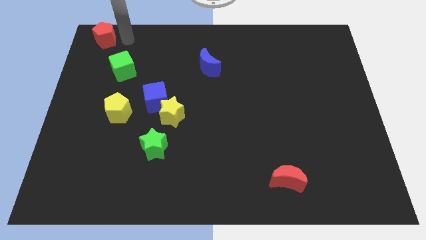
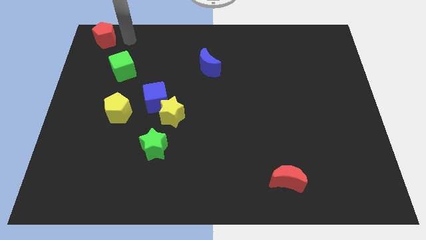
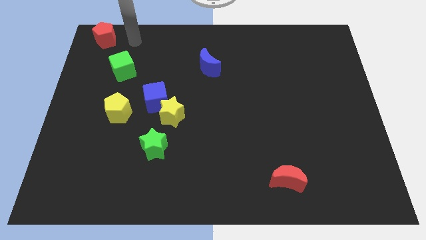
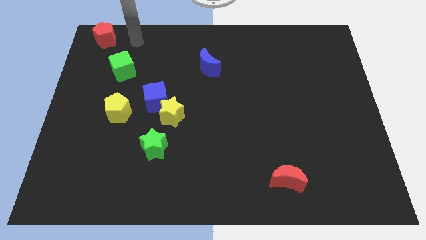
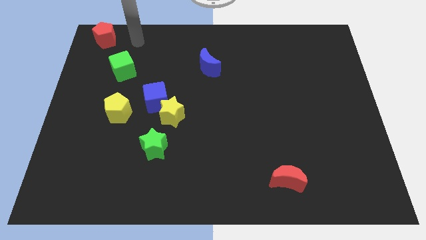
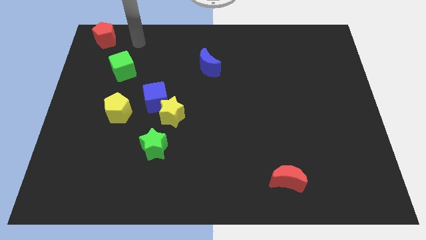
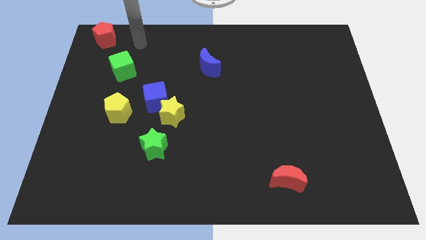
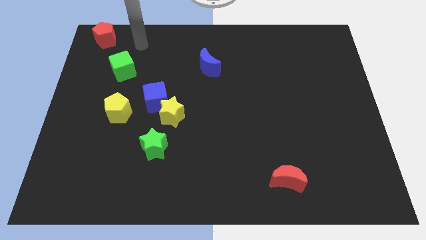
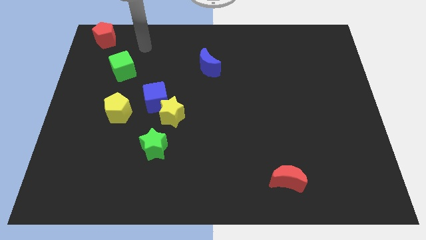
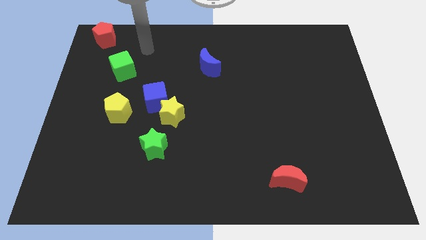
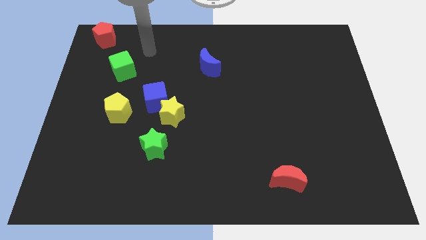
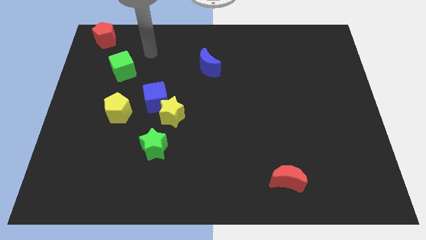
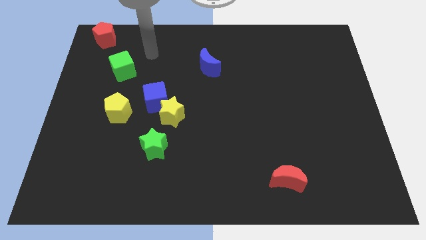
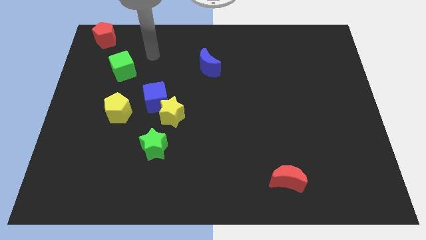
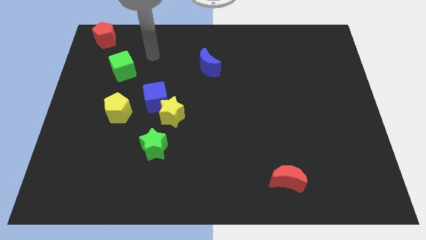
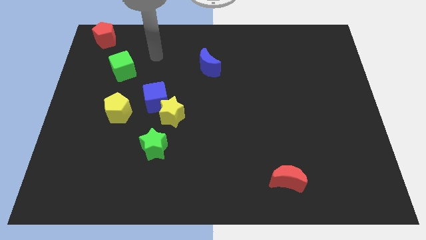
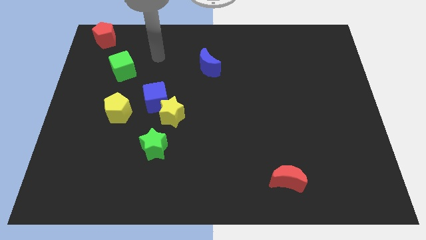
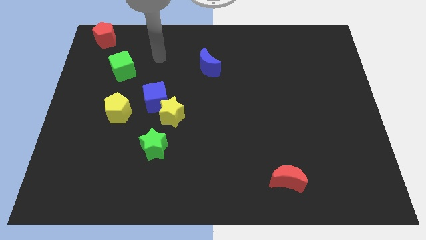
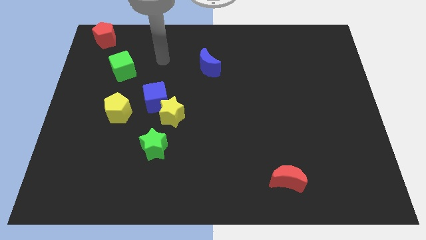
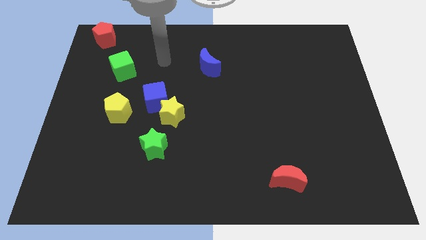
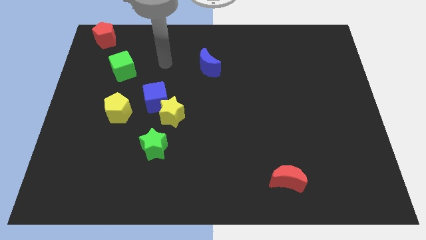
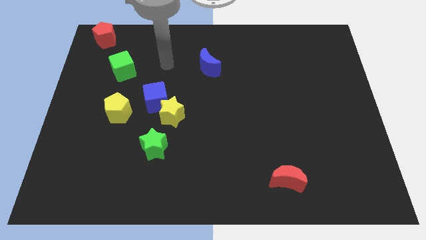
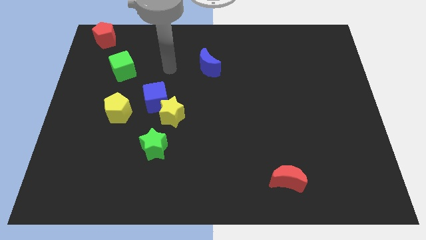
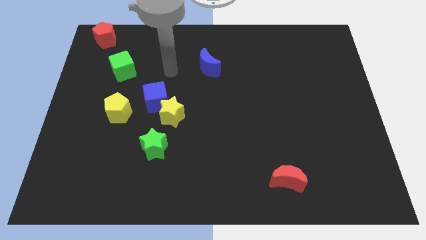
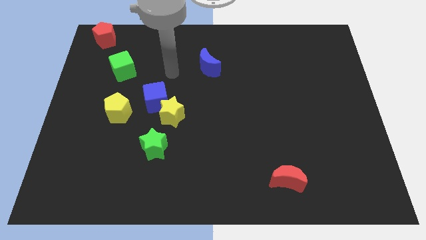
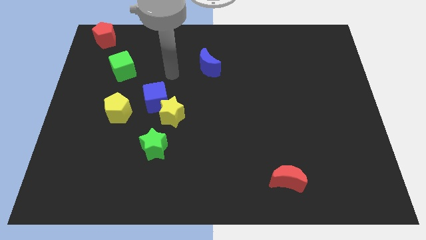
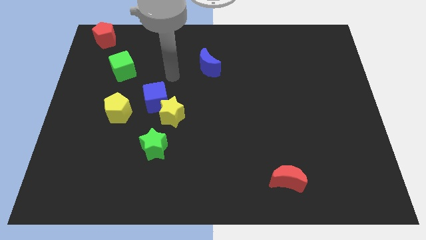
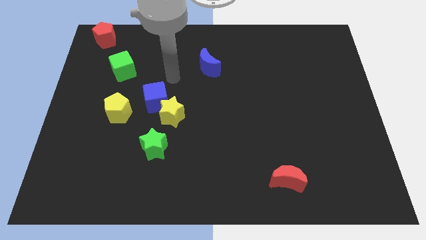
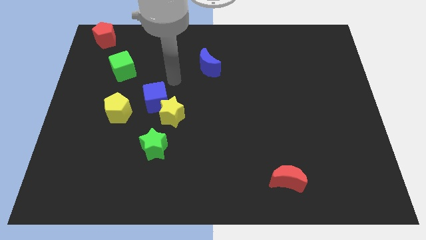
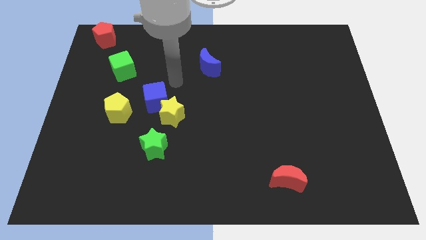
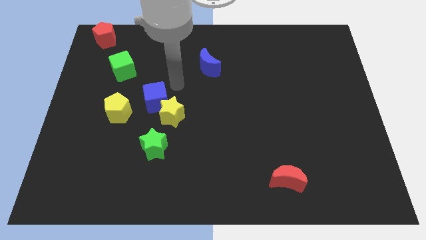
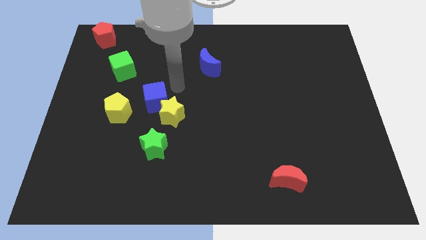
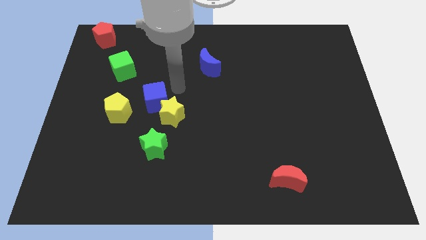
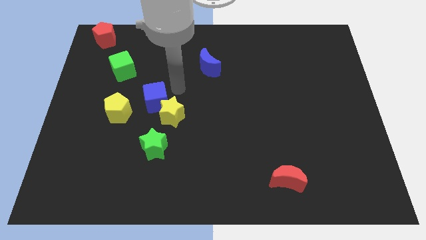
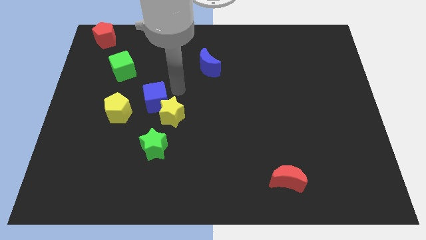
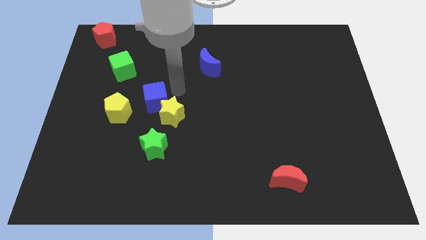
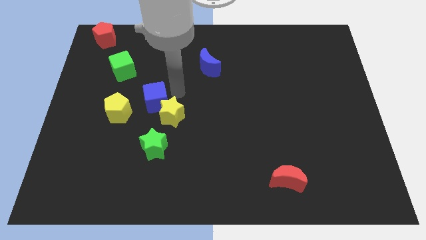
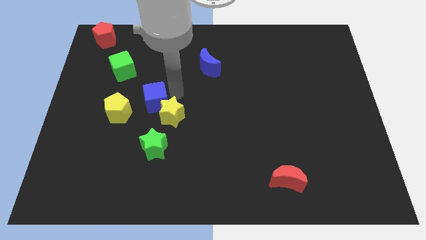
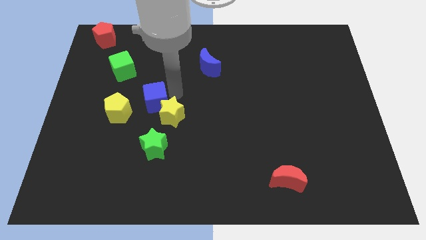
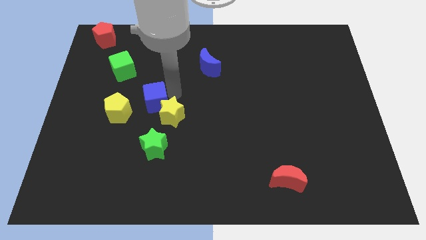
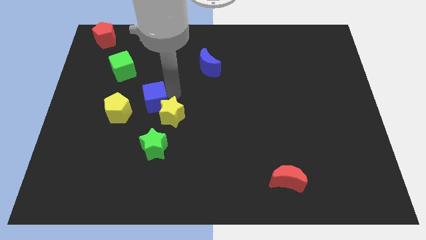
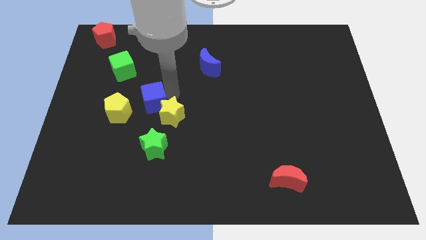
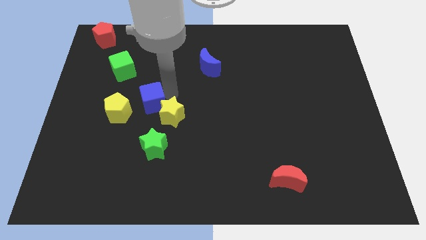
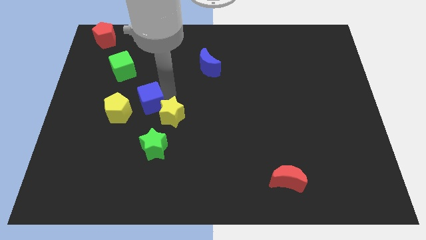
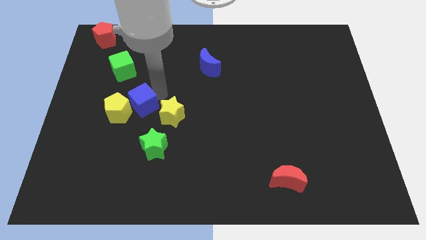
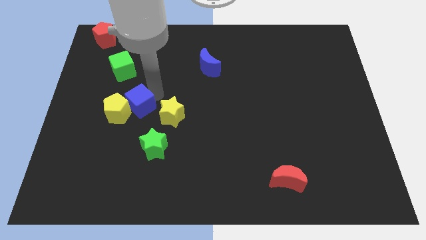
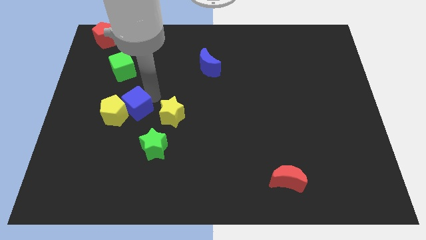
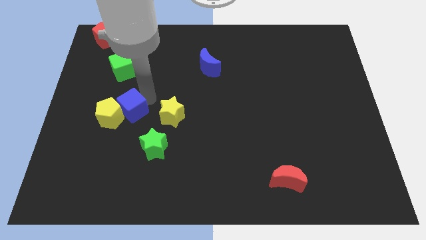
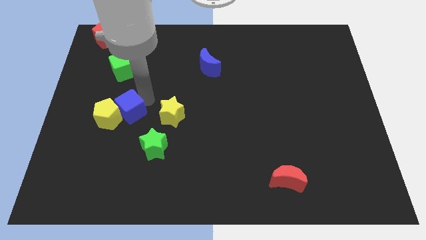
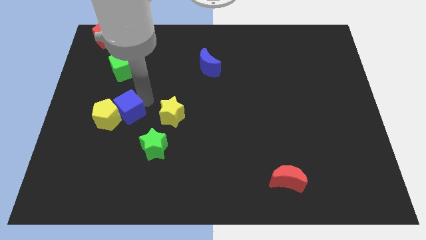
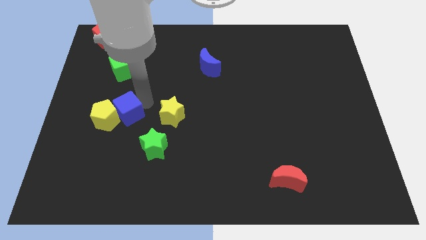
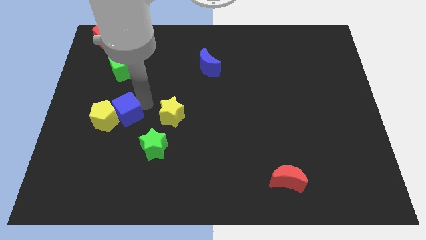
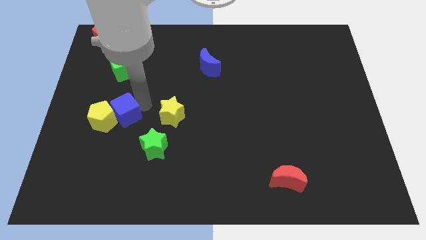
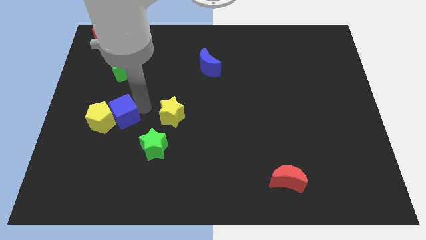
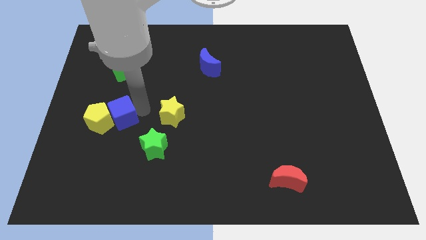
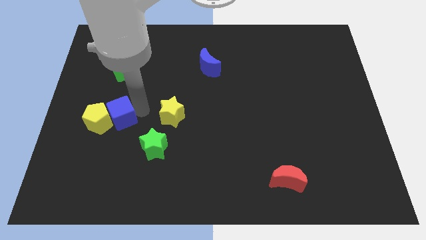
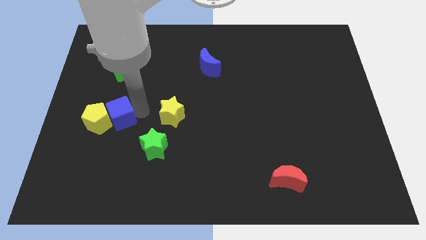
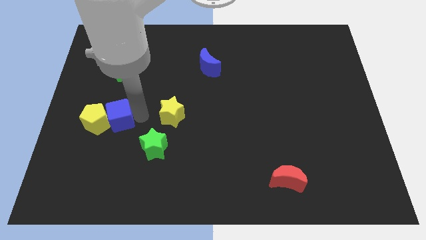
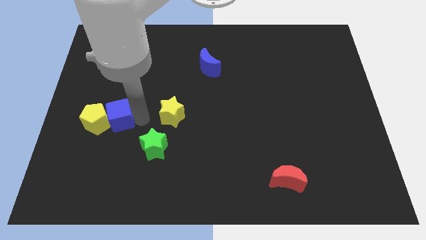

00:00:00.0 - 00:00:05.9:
move the blue cube into the yellow pentagon

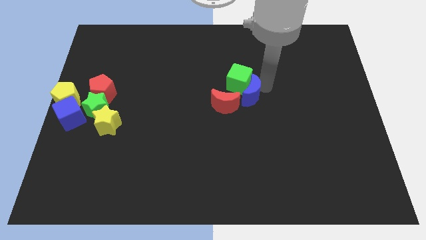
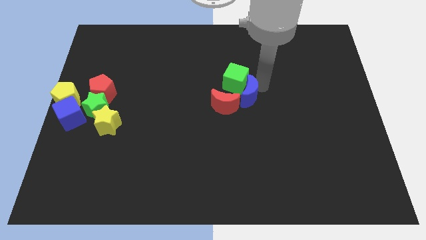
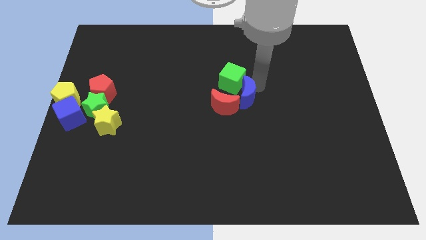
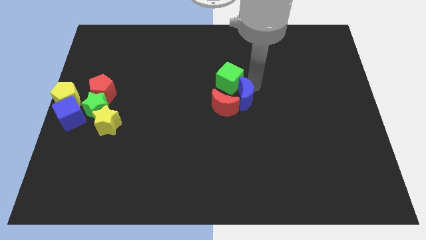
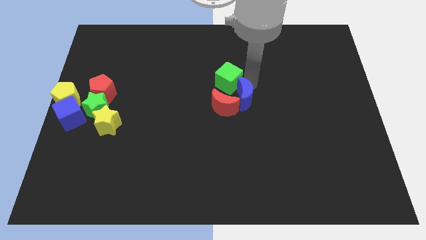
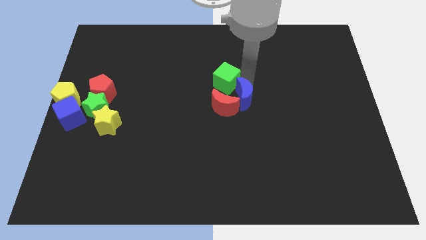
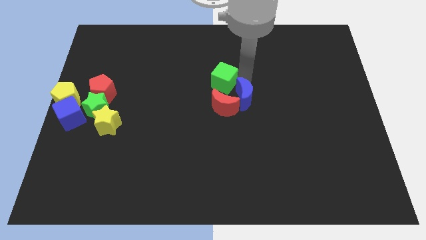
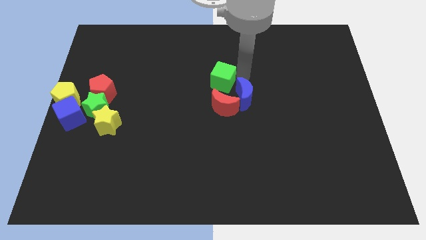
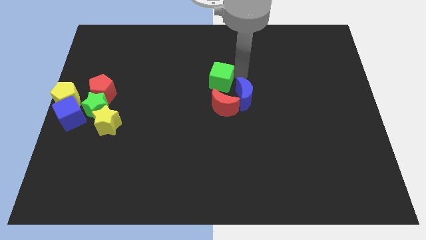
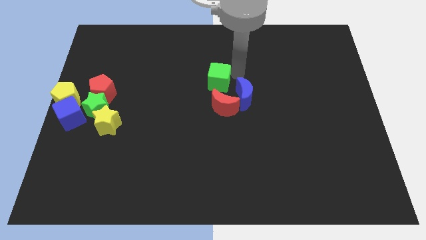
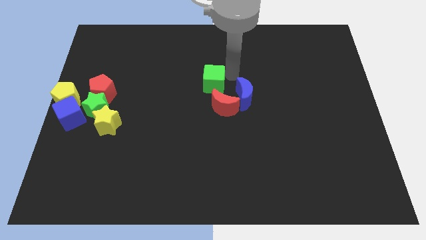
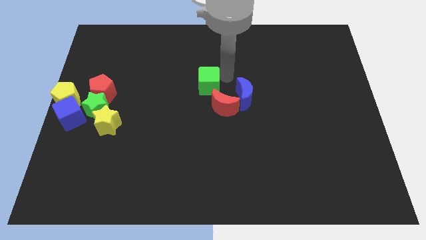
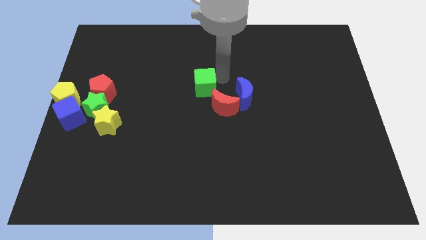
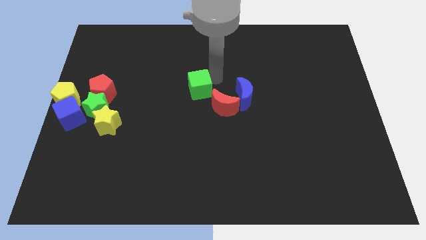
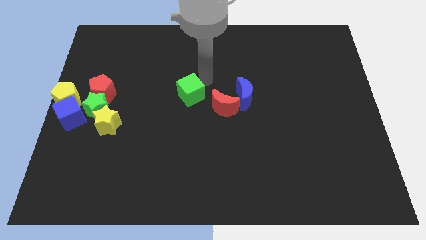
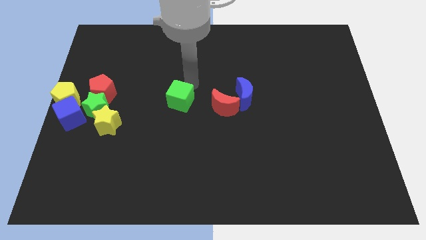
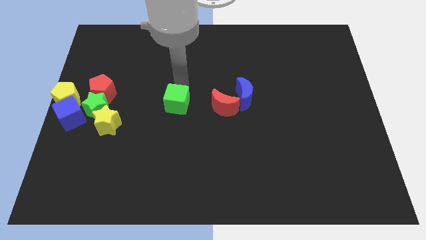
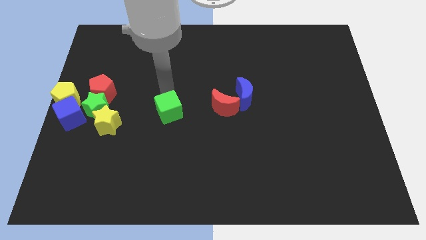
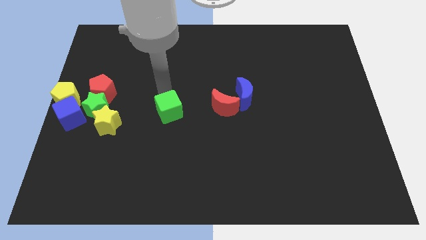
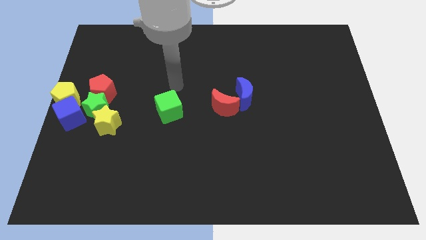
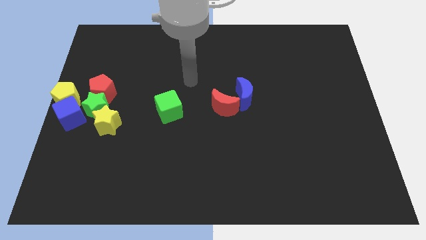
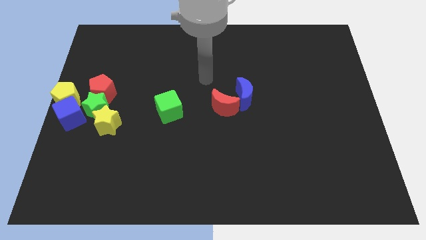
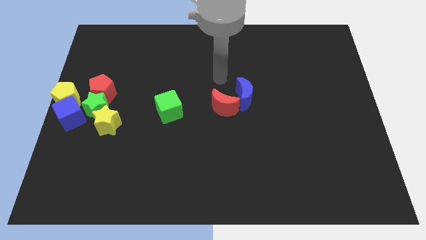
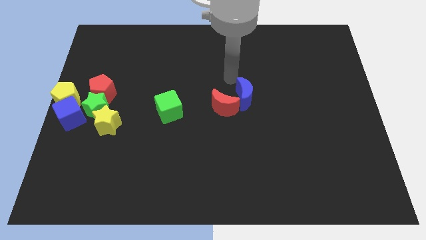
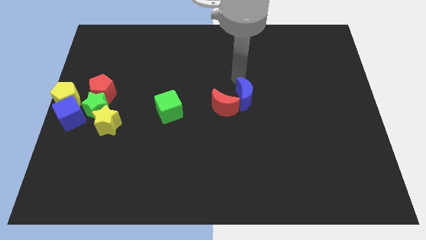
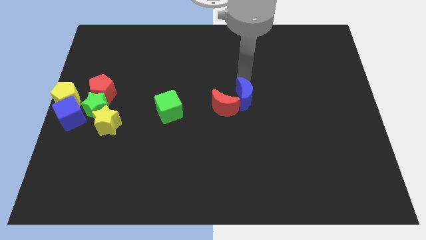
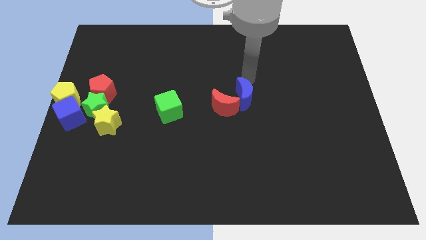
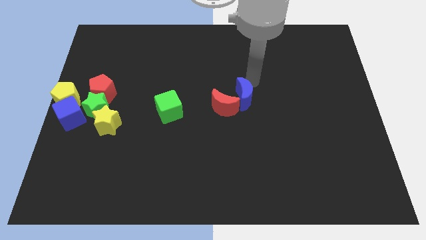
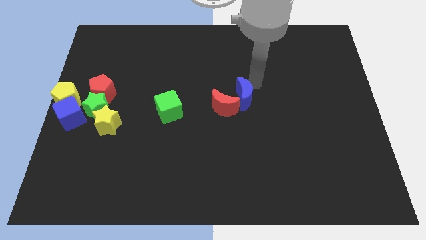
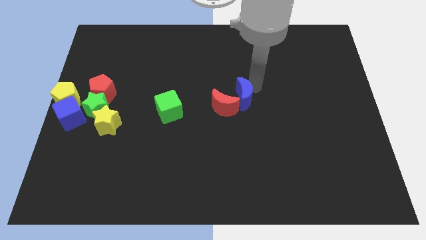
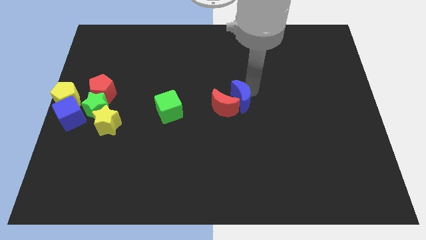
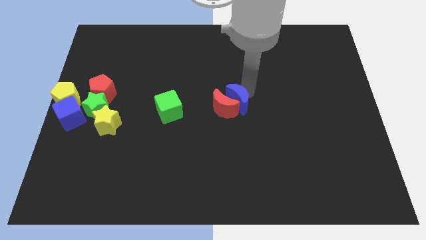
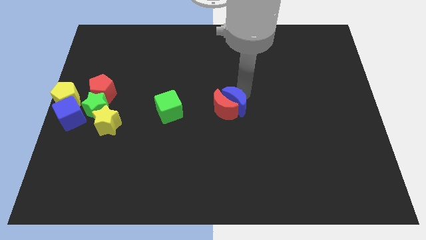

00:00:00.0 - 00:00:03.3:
move blue moon close to the red moon
